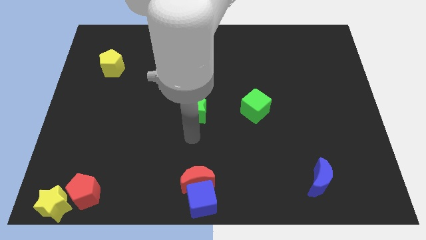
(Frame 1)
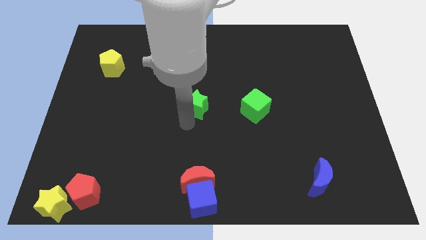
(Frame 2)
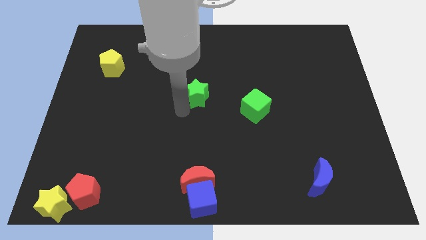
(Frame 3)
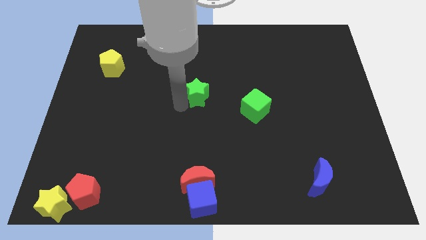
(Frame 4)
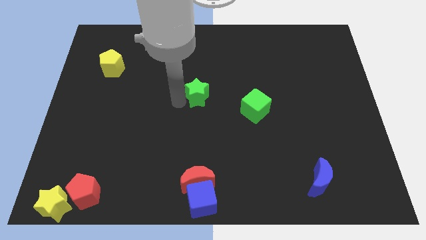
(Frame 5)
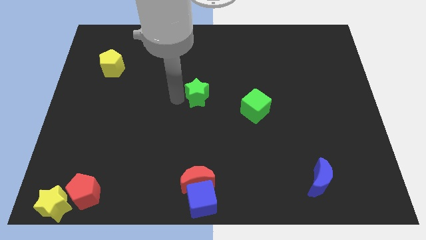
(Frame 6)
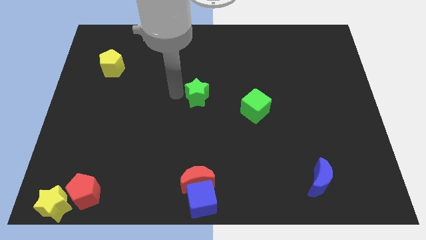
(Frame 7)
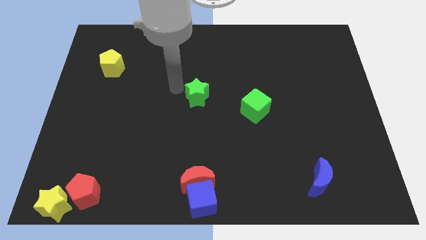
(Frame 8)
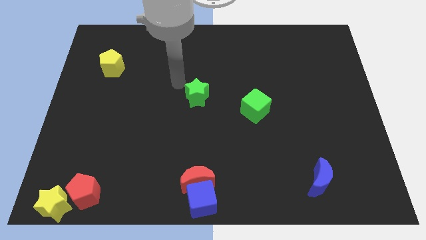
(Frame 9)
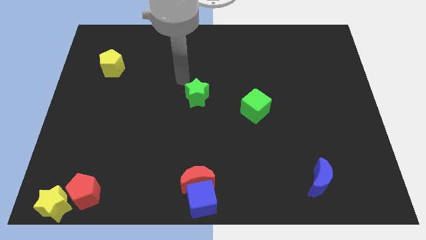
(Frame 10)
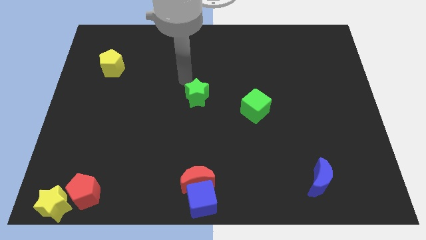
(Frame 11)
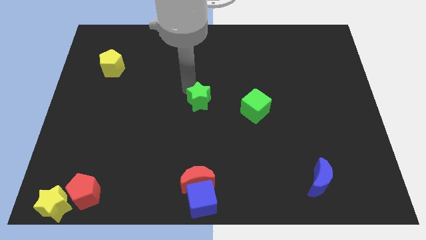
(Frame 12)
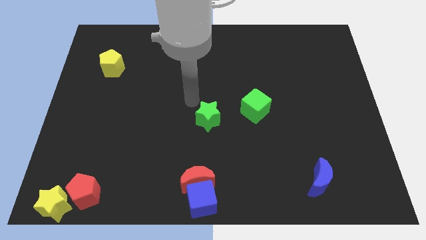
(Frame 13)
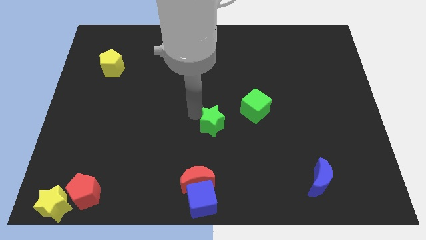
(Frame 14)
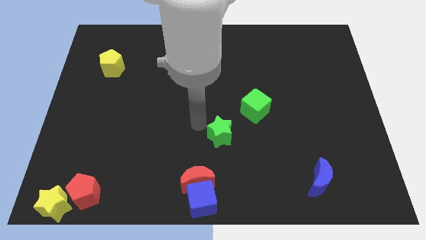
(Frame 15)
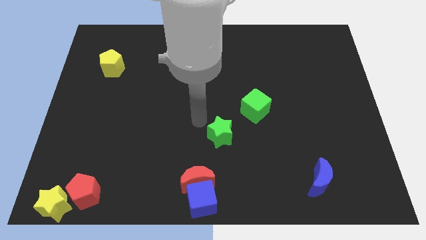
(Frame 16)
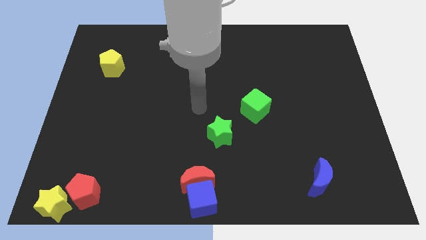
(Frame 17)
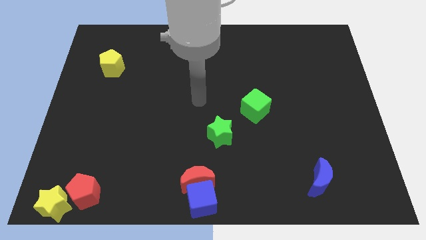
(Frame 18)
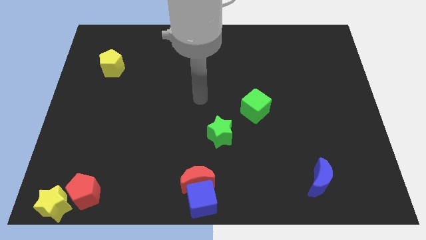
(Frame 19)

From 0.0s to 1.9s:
move the green star diagonally bottom left to green cube

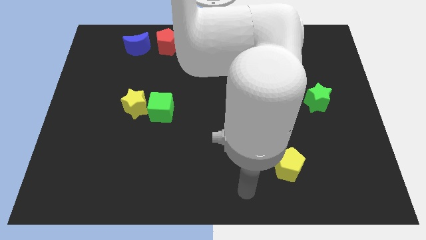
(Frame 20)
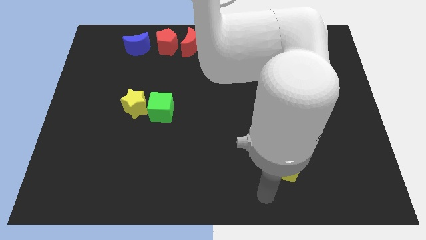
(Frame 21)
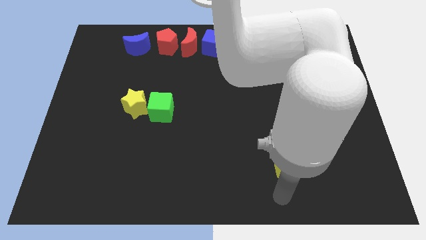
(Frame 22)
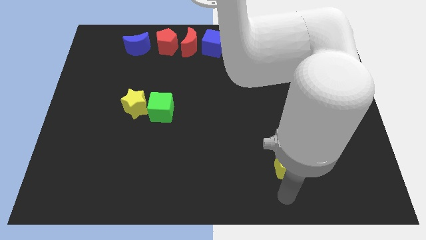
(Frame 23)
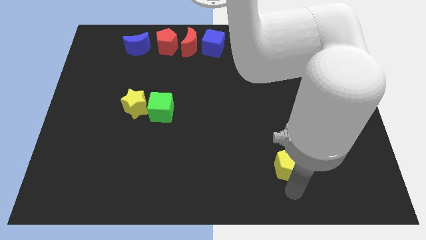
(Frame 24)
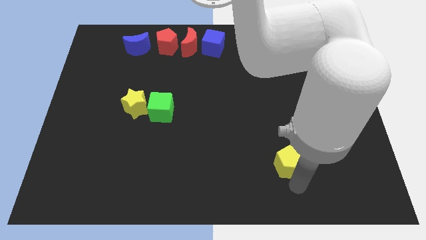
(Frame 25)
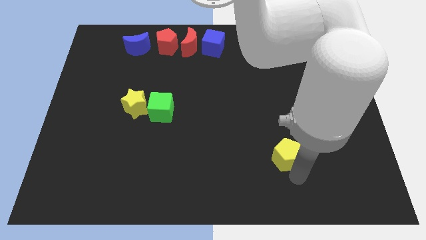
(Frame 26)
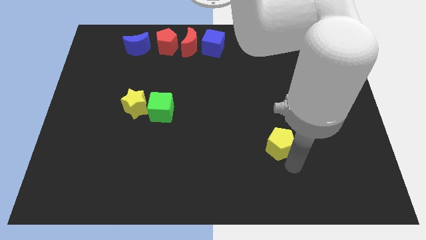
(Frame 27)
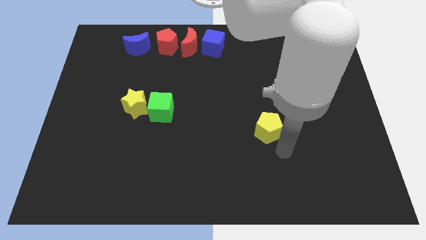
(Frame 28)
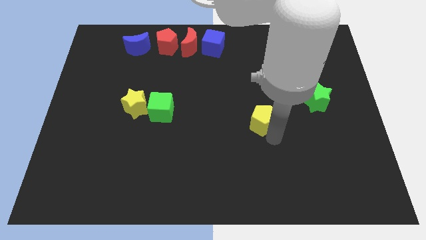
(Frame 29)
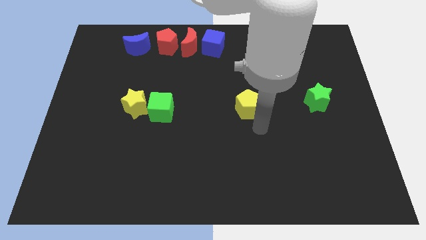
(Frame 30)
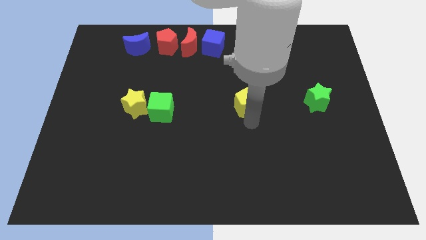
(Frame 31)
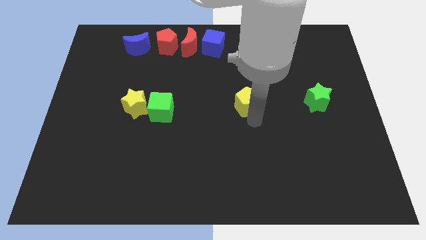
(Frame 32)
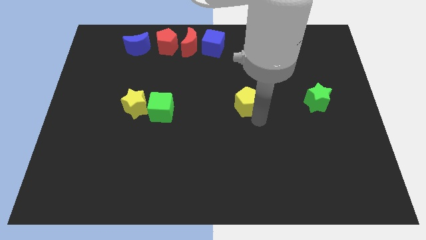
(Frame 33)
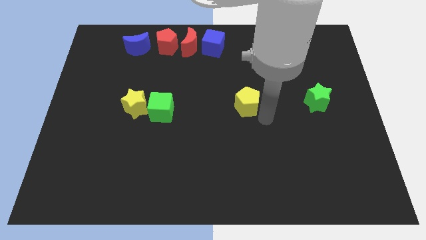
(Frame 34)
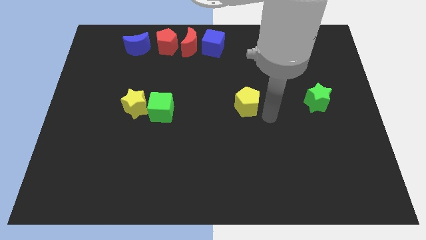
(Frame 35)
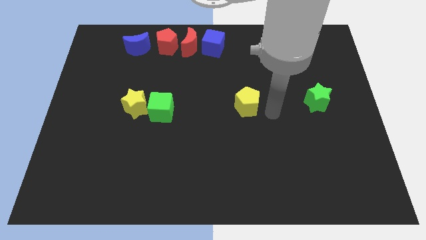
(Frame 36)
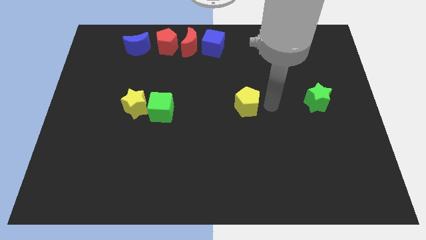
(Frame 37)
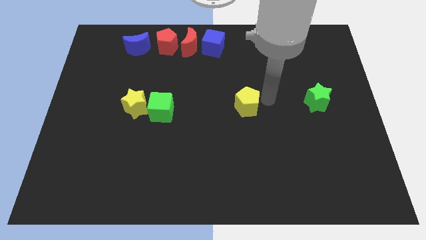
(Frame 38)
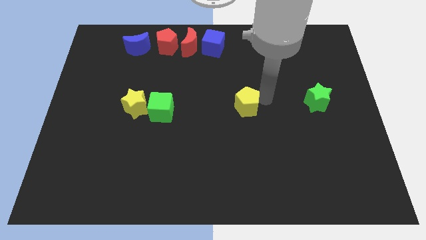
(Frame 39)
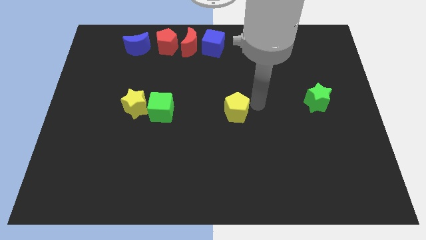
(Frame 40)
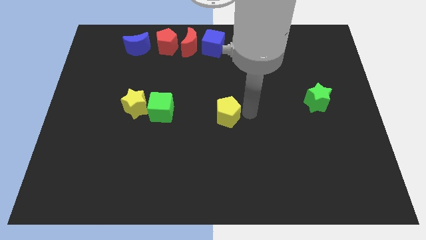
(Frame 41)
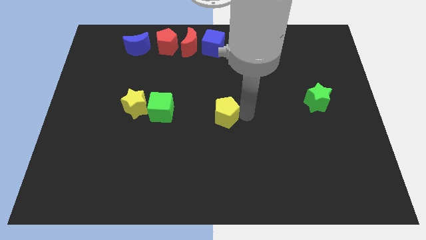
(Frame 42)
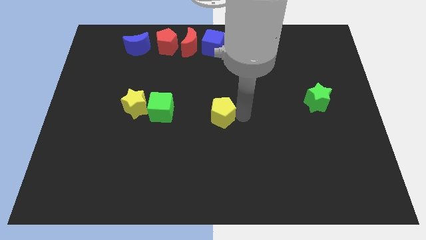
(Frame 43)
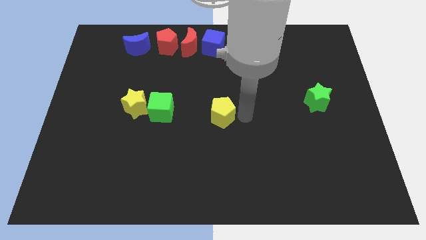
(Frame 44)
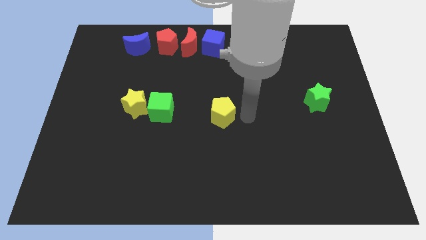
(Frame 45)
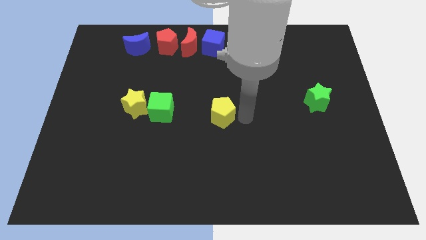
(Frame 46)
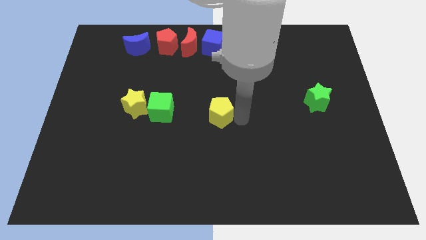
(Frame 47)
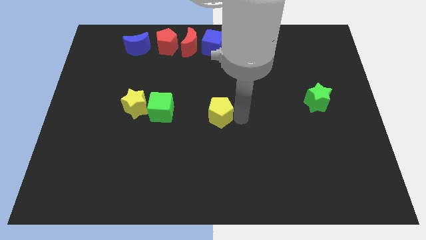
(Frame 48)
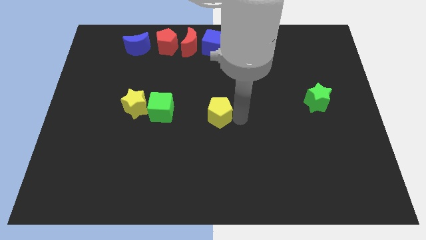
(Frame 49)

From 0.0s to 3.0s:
push yellow pentagon upwards

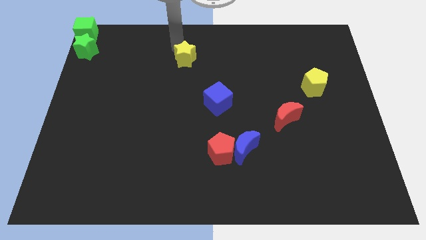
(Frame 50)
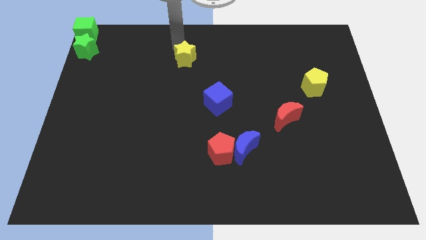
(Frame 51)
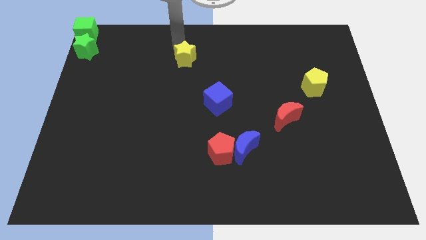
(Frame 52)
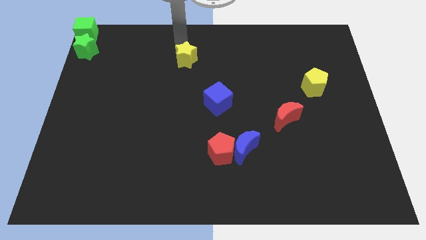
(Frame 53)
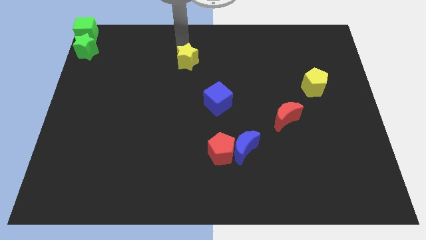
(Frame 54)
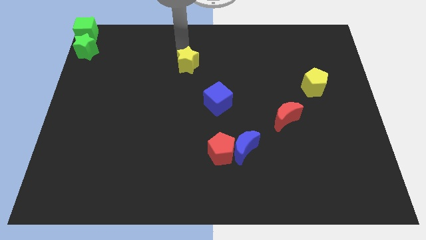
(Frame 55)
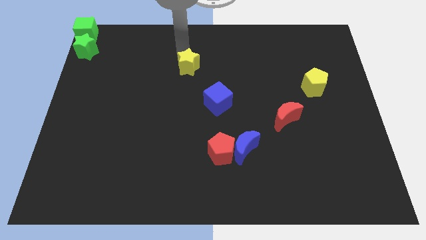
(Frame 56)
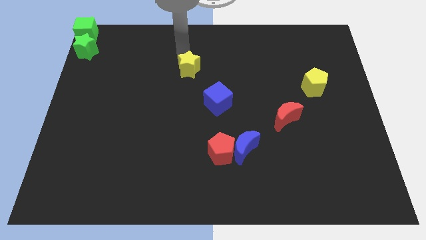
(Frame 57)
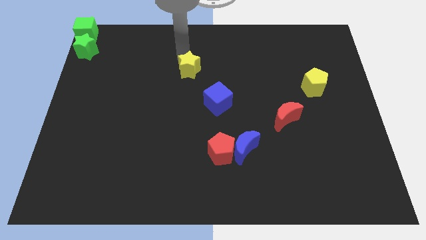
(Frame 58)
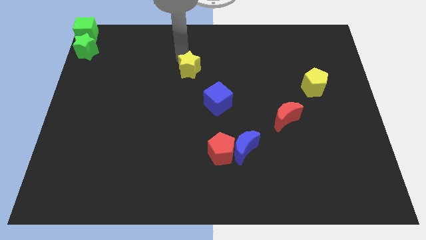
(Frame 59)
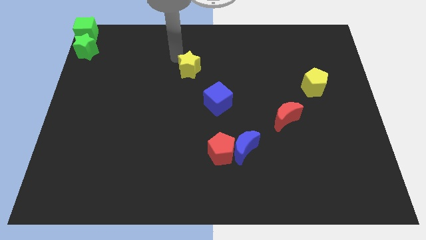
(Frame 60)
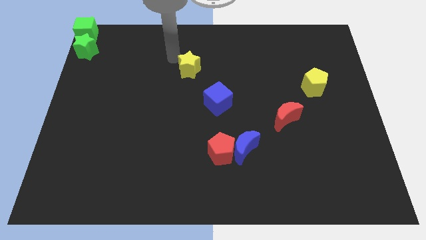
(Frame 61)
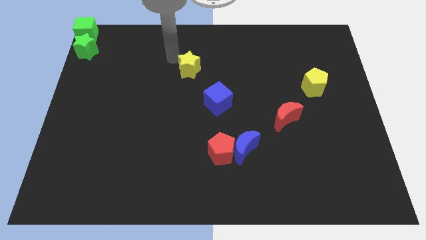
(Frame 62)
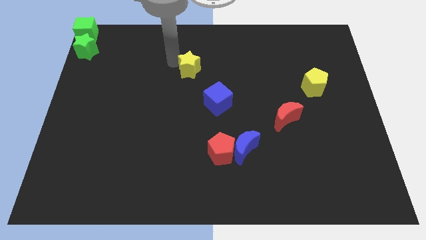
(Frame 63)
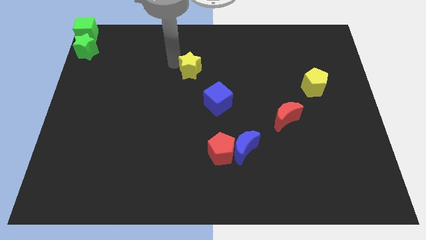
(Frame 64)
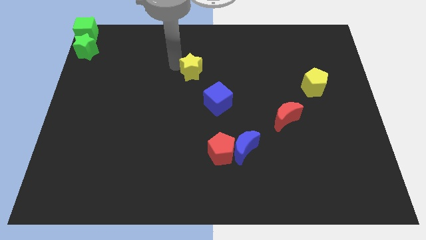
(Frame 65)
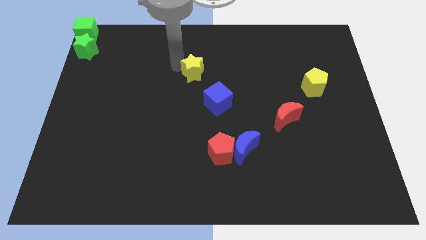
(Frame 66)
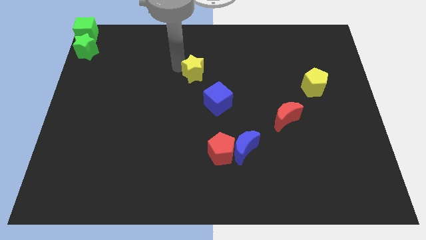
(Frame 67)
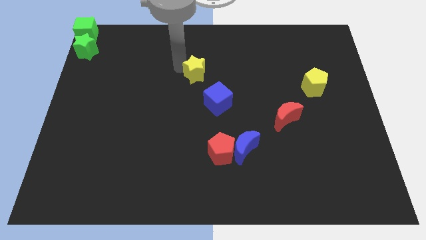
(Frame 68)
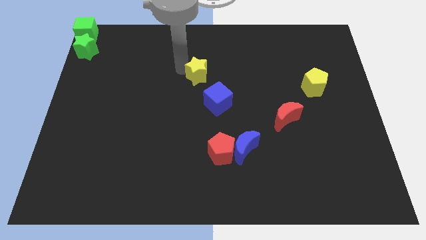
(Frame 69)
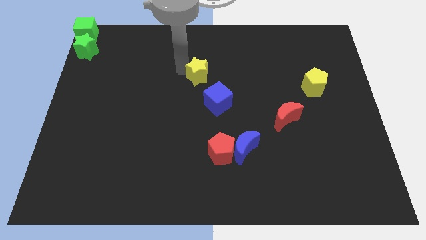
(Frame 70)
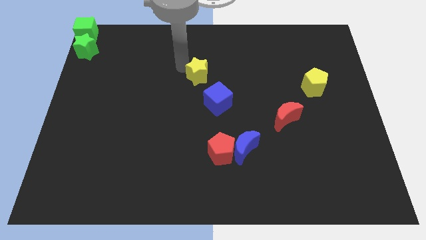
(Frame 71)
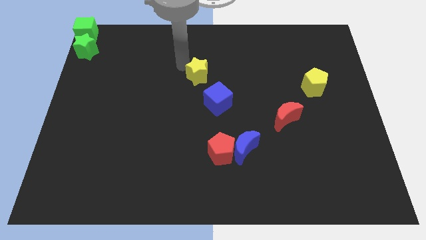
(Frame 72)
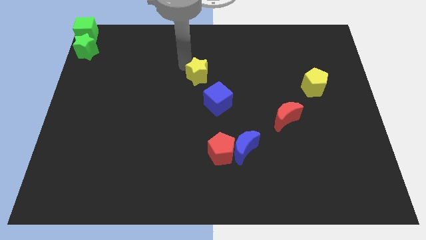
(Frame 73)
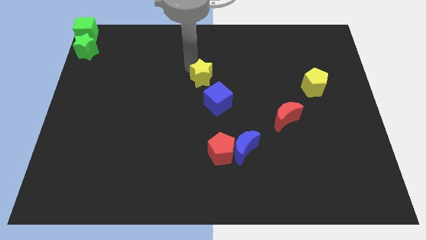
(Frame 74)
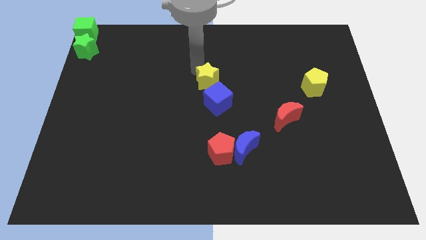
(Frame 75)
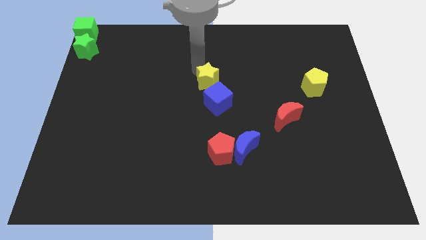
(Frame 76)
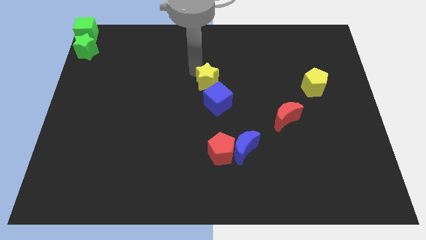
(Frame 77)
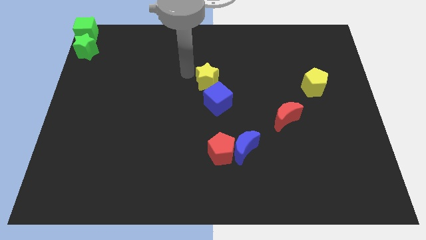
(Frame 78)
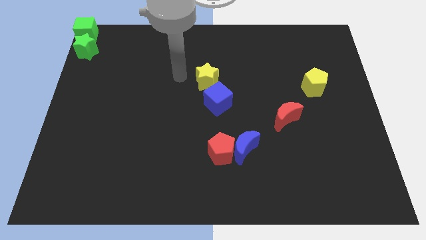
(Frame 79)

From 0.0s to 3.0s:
push the yellow star towards the center of the board

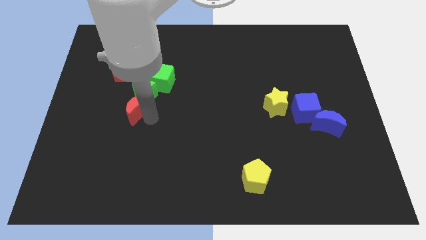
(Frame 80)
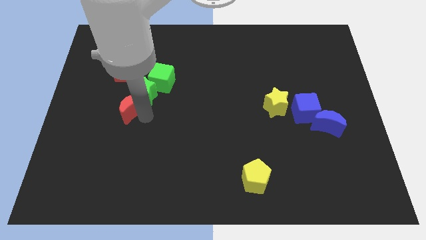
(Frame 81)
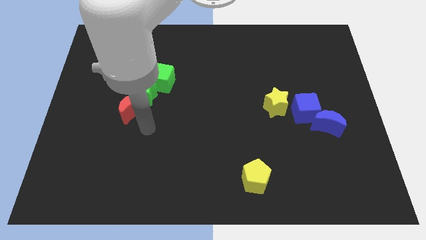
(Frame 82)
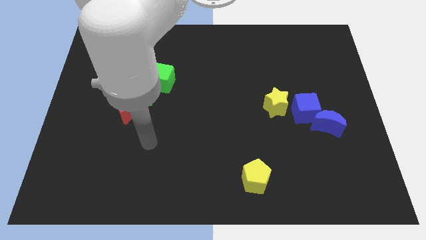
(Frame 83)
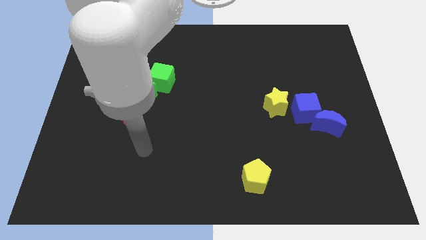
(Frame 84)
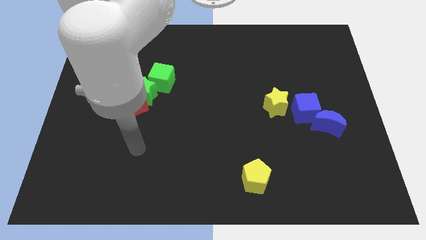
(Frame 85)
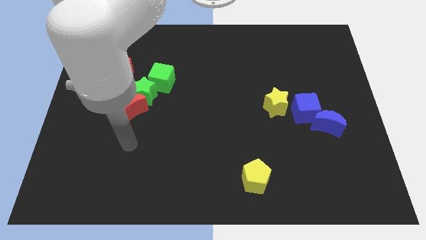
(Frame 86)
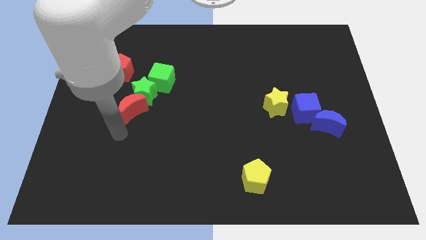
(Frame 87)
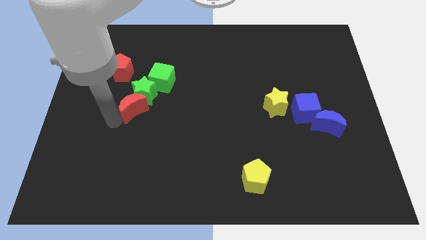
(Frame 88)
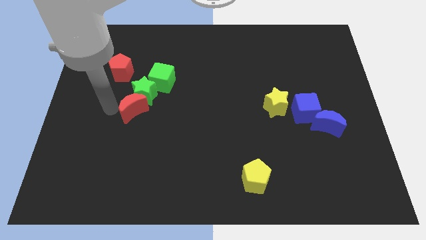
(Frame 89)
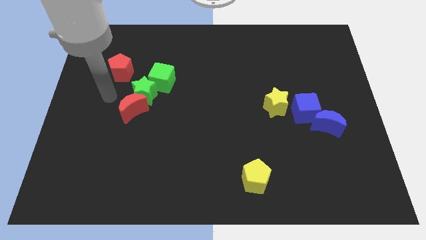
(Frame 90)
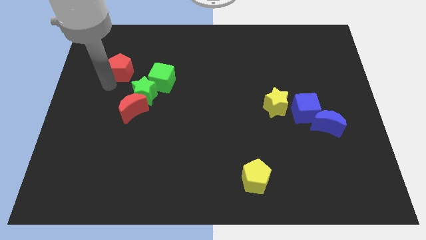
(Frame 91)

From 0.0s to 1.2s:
move the arm towards the red pentagon
